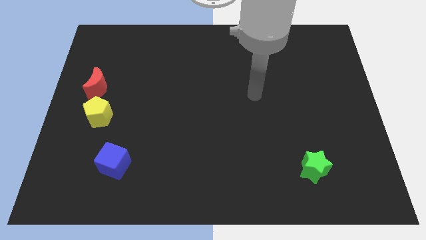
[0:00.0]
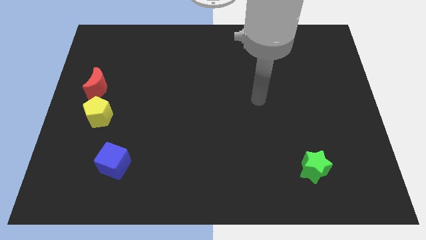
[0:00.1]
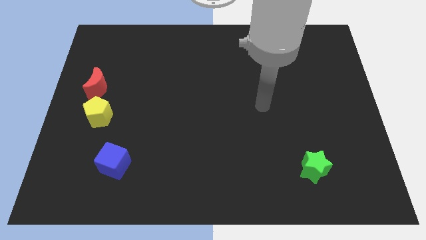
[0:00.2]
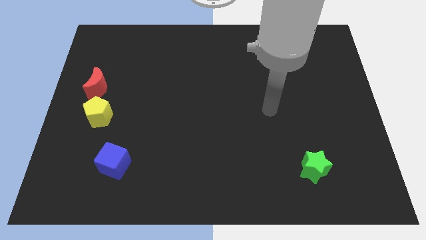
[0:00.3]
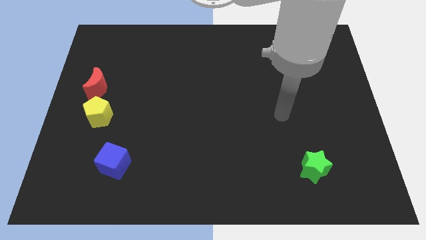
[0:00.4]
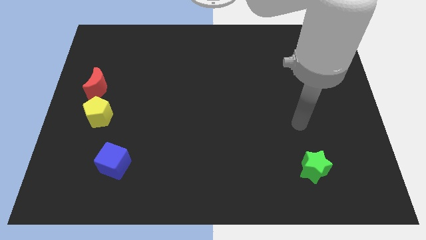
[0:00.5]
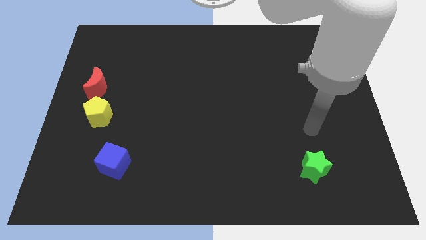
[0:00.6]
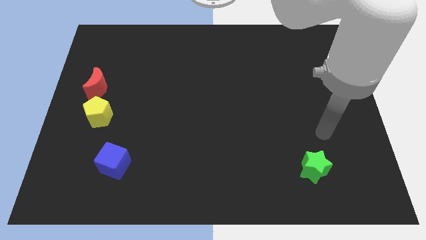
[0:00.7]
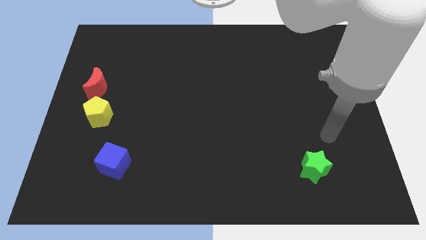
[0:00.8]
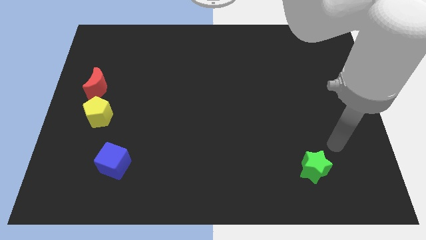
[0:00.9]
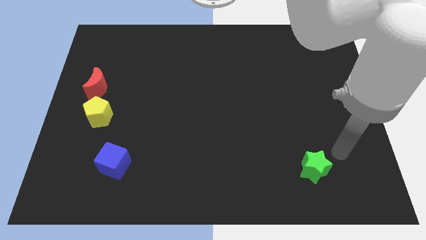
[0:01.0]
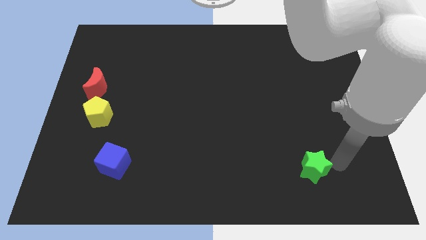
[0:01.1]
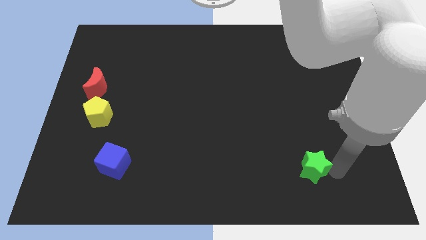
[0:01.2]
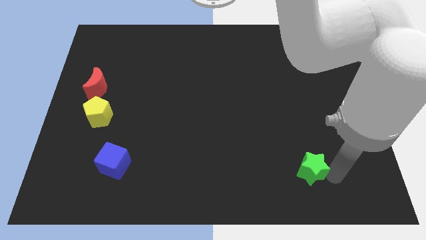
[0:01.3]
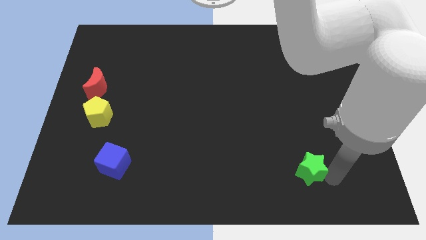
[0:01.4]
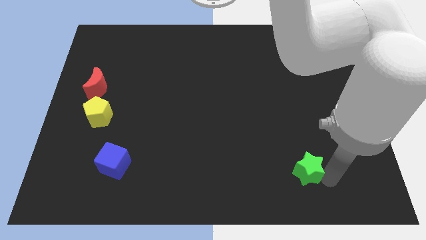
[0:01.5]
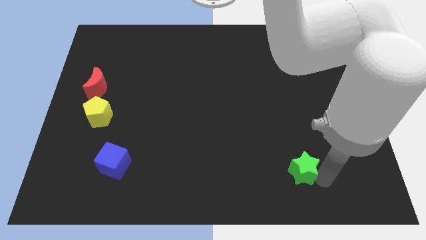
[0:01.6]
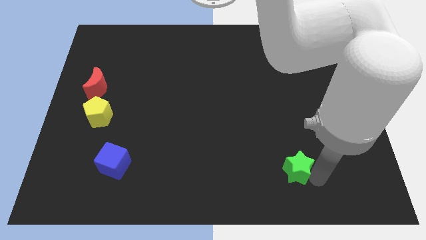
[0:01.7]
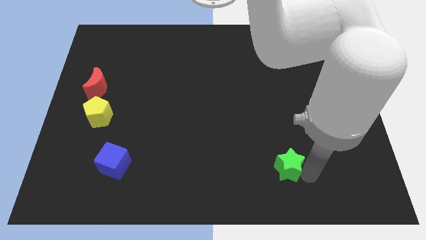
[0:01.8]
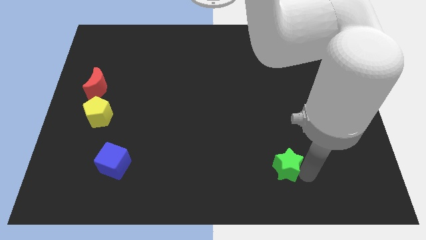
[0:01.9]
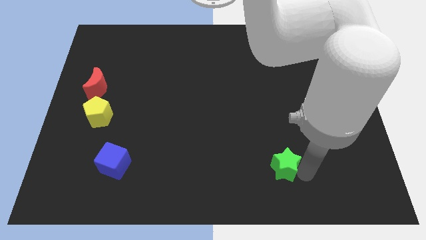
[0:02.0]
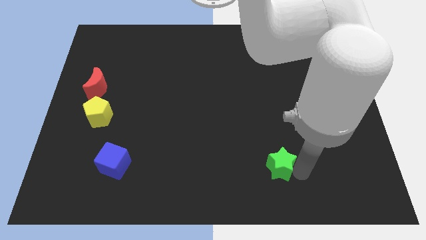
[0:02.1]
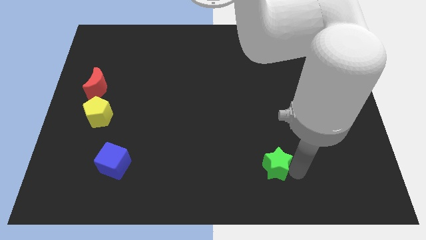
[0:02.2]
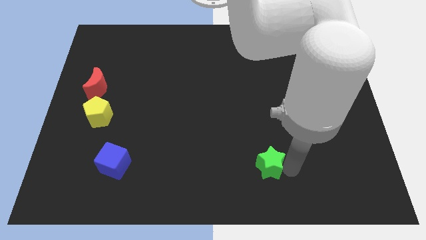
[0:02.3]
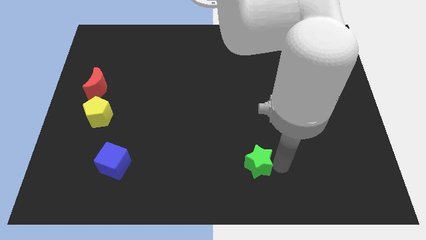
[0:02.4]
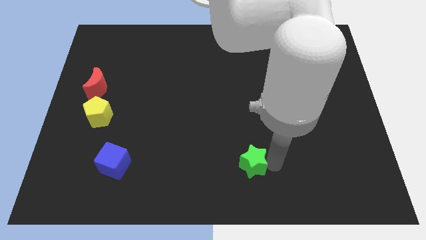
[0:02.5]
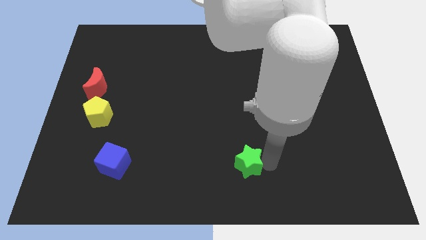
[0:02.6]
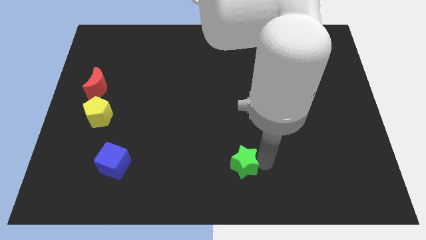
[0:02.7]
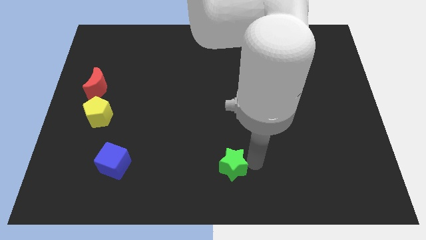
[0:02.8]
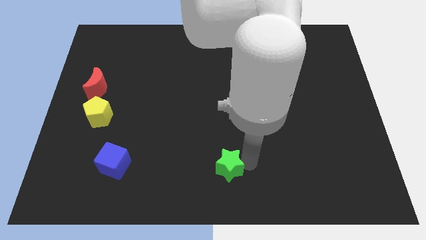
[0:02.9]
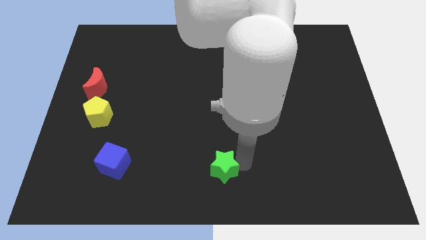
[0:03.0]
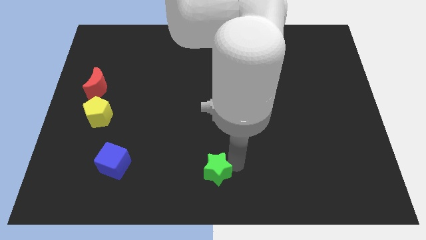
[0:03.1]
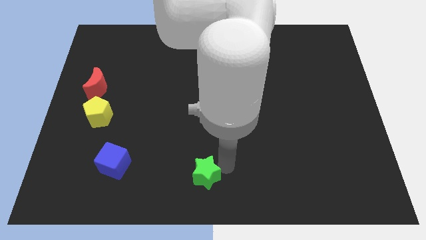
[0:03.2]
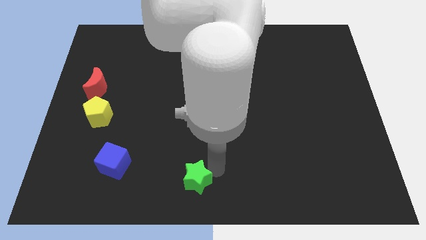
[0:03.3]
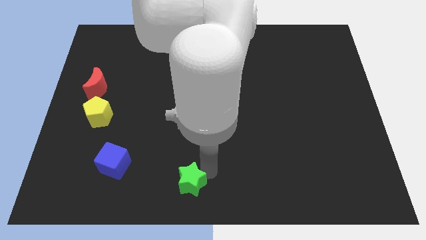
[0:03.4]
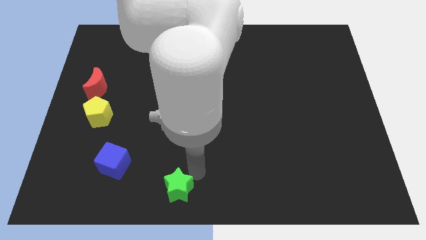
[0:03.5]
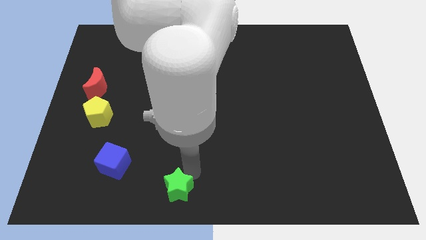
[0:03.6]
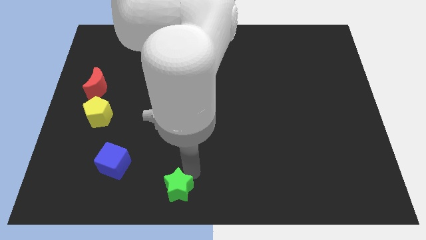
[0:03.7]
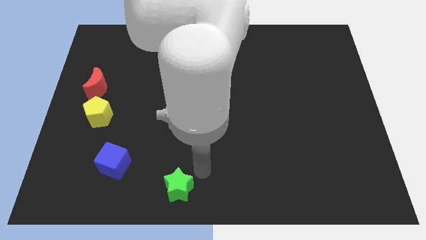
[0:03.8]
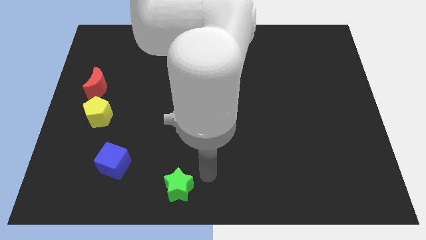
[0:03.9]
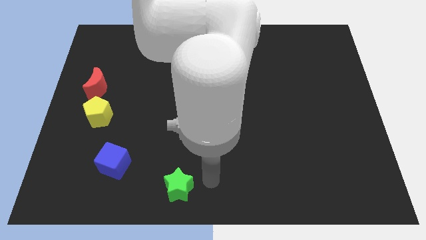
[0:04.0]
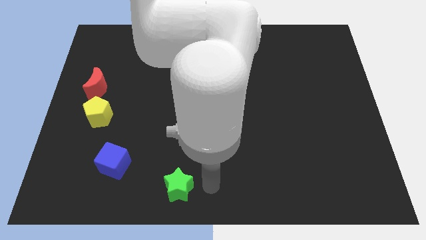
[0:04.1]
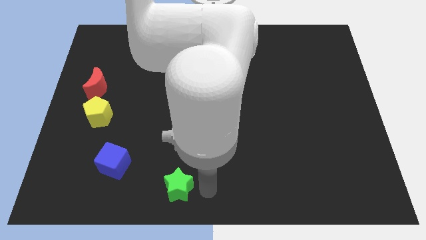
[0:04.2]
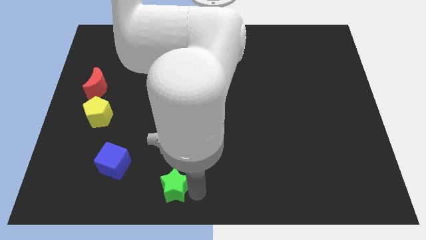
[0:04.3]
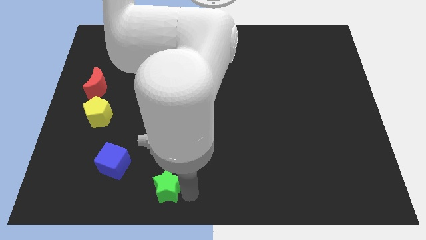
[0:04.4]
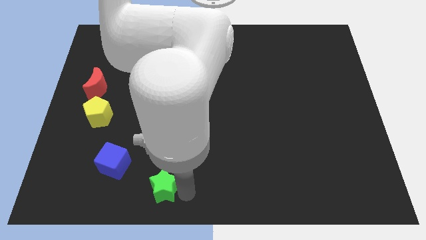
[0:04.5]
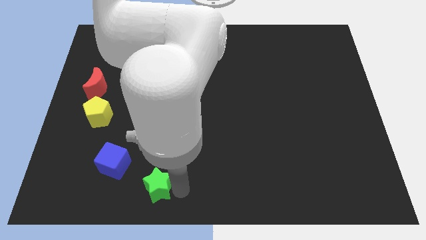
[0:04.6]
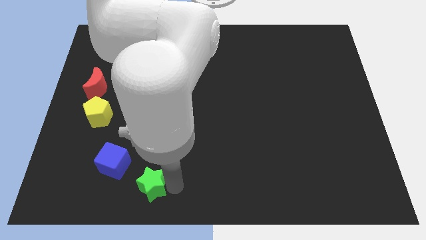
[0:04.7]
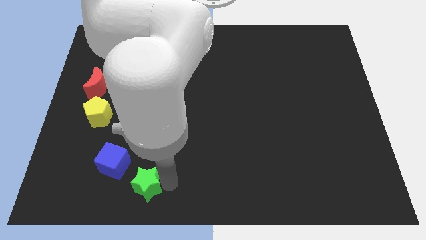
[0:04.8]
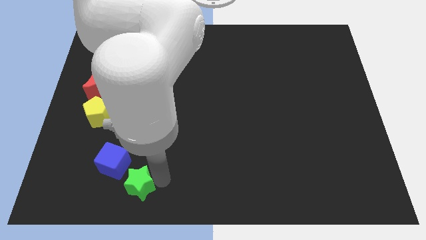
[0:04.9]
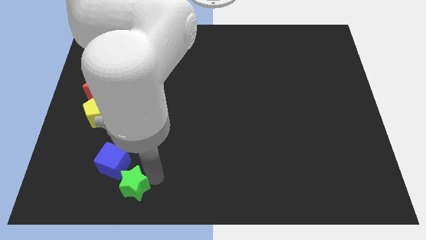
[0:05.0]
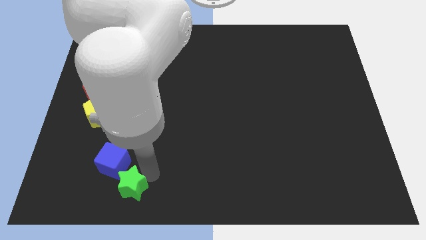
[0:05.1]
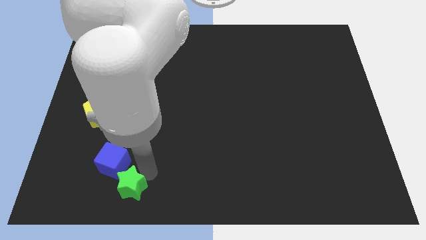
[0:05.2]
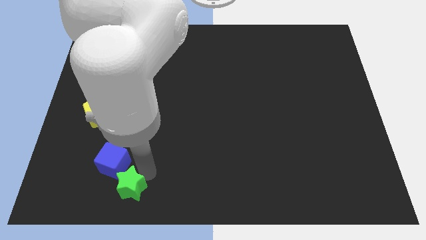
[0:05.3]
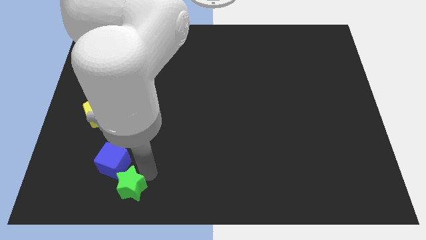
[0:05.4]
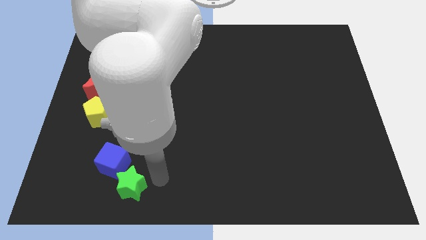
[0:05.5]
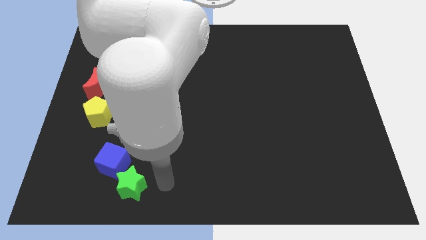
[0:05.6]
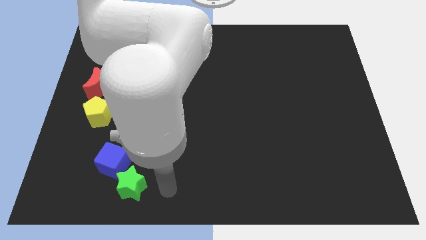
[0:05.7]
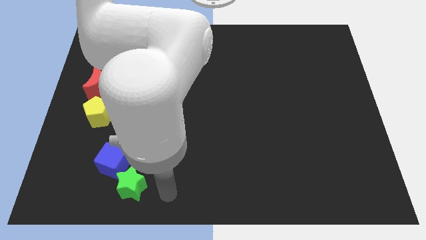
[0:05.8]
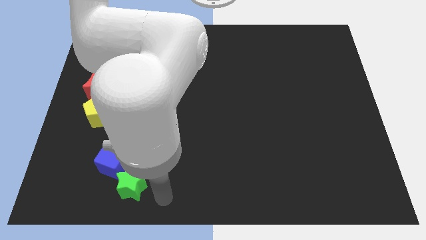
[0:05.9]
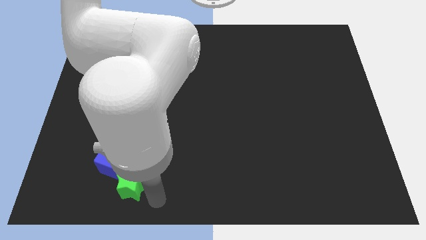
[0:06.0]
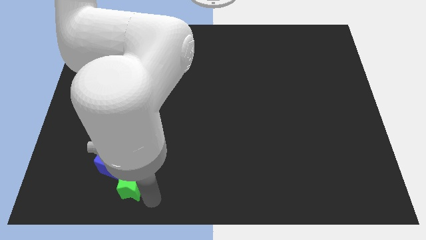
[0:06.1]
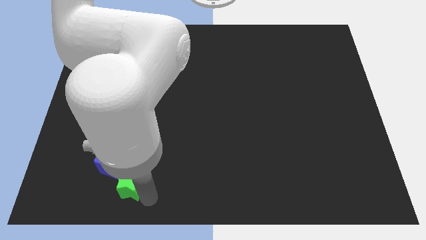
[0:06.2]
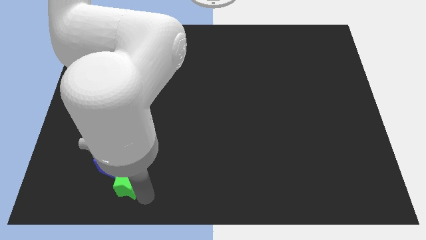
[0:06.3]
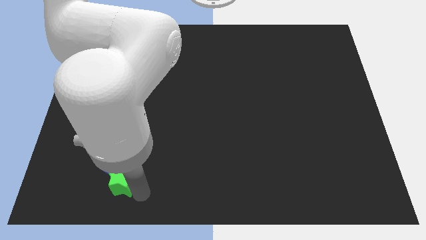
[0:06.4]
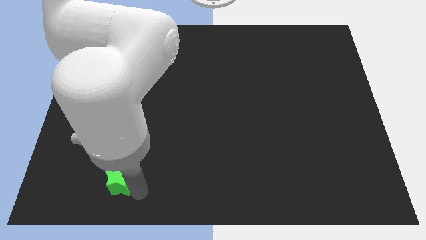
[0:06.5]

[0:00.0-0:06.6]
put the green star to the cube

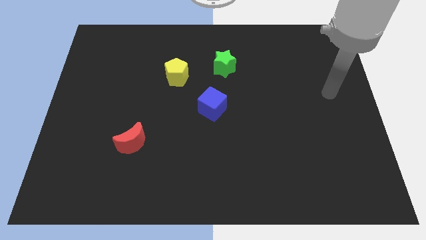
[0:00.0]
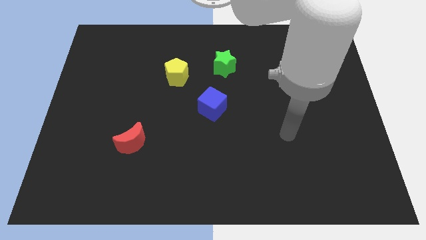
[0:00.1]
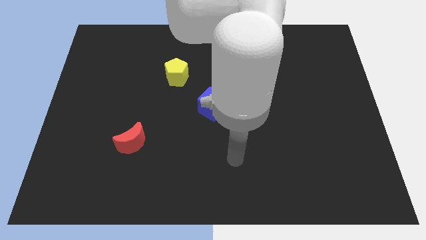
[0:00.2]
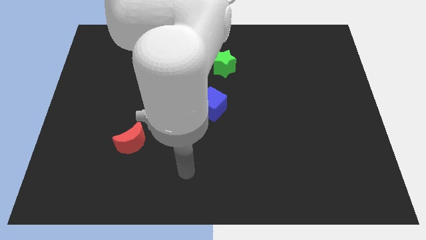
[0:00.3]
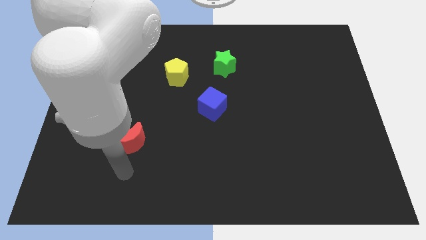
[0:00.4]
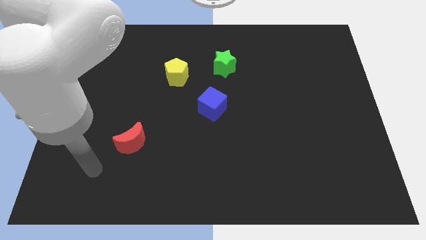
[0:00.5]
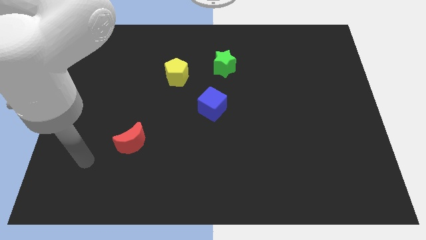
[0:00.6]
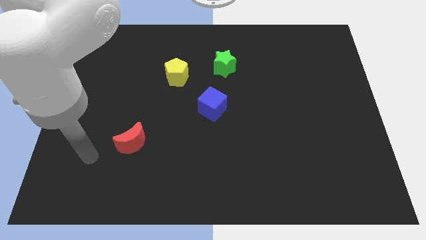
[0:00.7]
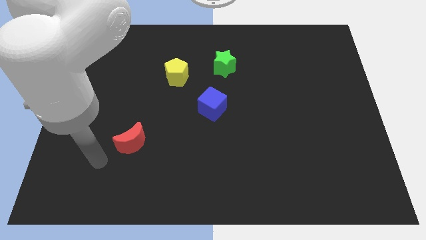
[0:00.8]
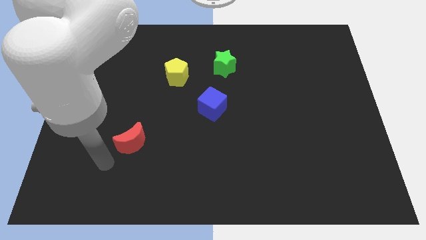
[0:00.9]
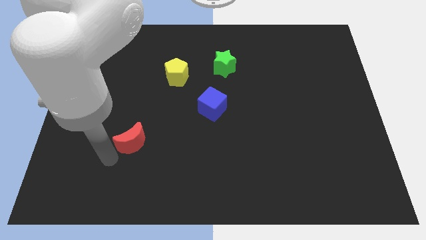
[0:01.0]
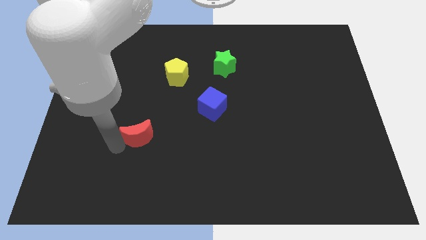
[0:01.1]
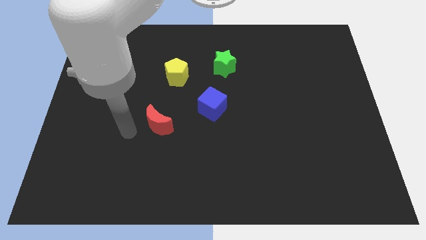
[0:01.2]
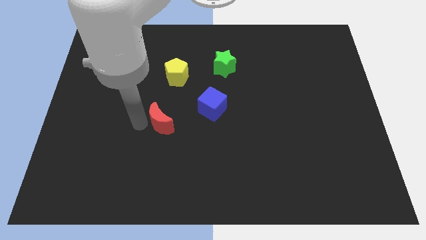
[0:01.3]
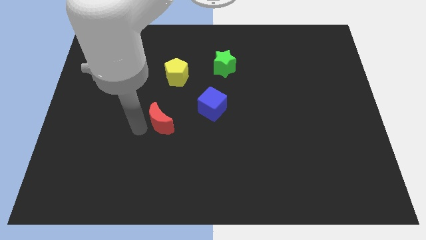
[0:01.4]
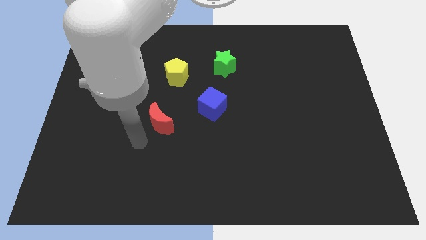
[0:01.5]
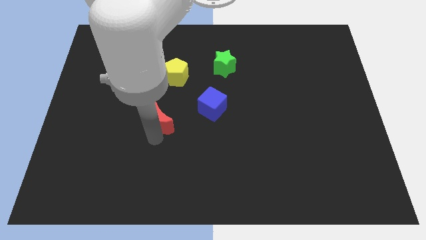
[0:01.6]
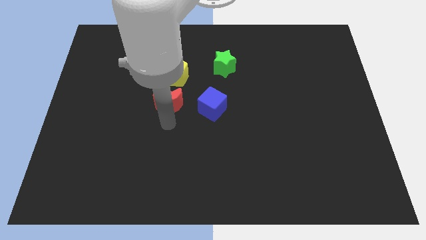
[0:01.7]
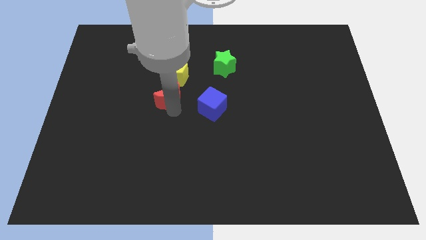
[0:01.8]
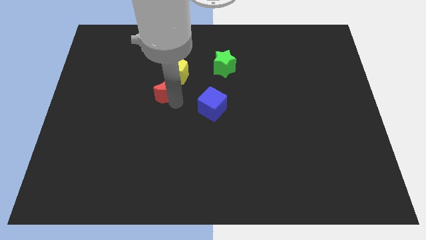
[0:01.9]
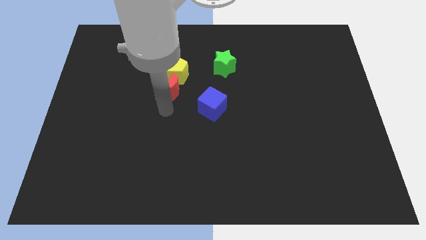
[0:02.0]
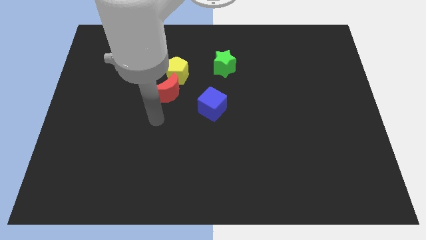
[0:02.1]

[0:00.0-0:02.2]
move the red block to the yellow block
